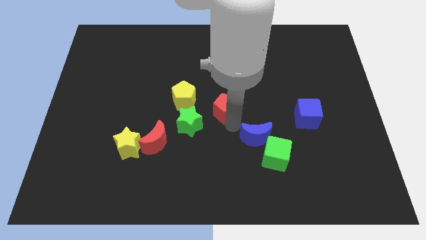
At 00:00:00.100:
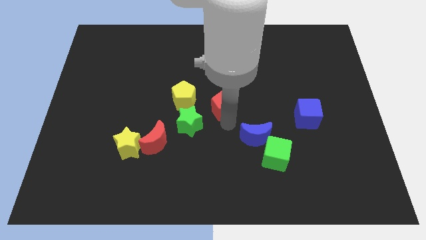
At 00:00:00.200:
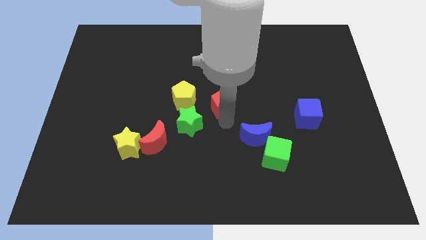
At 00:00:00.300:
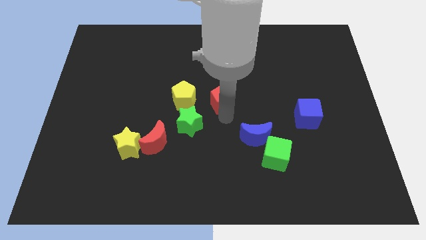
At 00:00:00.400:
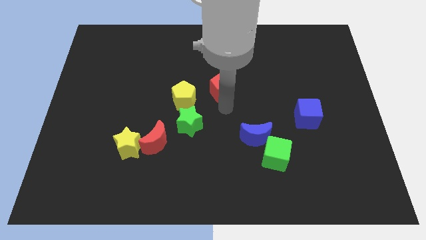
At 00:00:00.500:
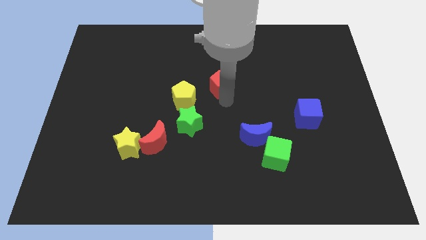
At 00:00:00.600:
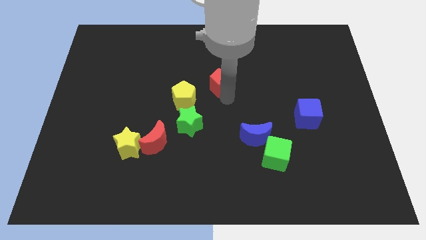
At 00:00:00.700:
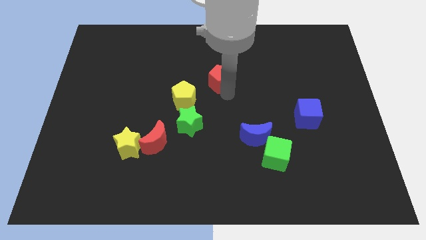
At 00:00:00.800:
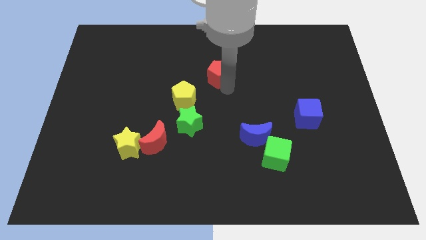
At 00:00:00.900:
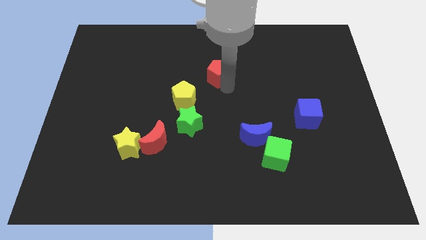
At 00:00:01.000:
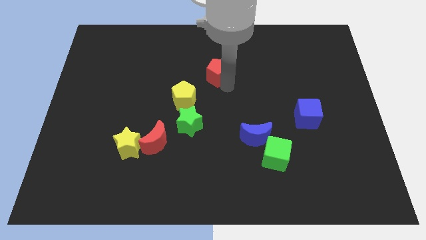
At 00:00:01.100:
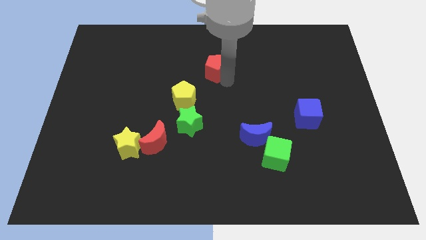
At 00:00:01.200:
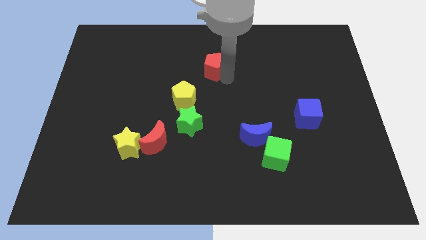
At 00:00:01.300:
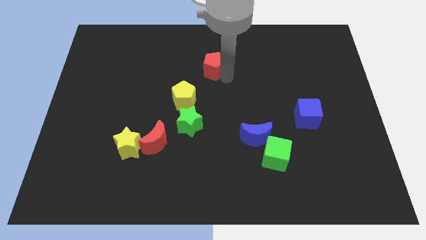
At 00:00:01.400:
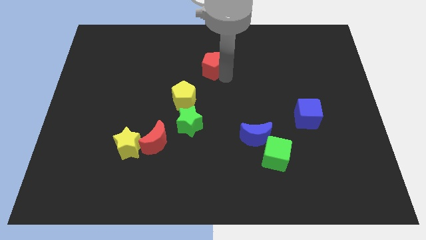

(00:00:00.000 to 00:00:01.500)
push the red pentagon diagonally top right to the yellow pentagon

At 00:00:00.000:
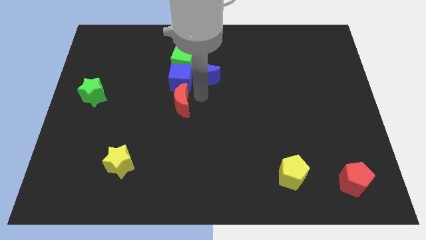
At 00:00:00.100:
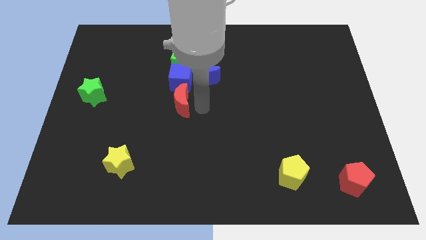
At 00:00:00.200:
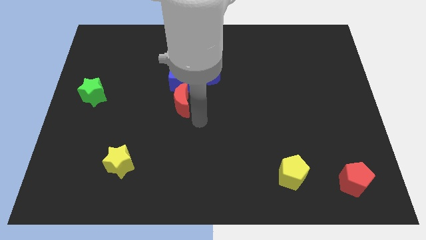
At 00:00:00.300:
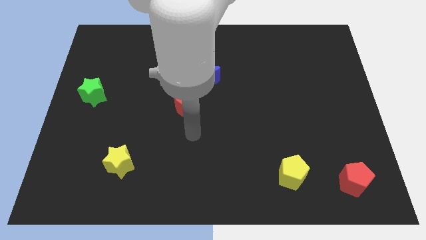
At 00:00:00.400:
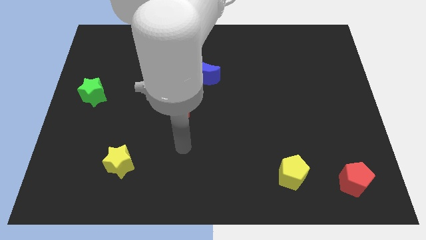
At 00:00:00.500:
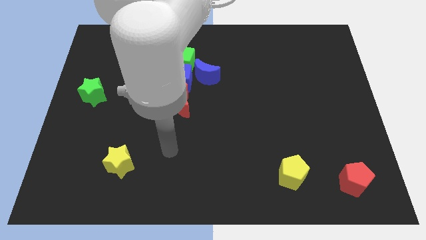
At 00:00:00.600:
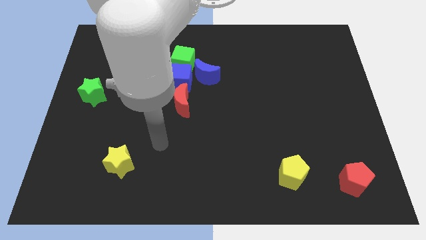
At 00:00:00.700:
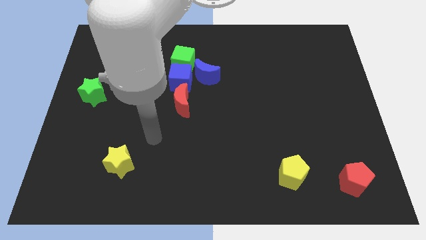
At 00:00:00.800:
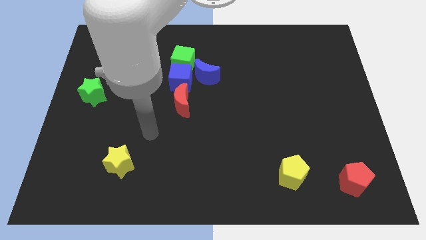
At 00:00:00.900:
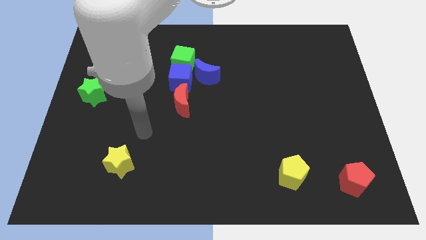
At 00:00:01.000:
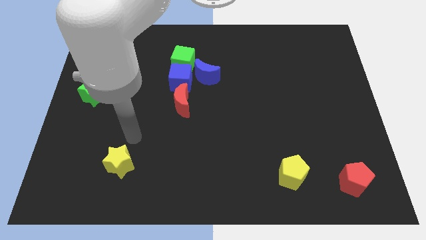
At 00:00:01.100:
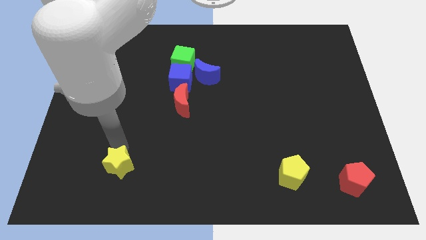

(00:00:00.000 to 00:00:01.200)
point your arm at the top of yellow star

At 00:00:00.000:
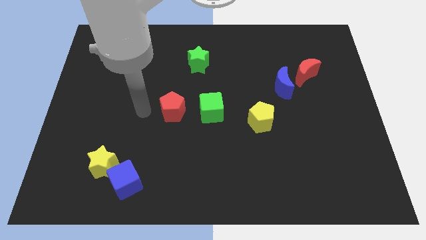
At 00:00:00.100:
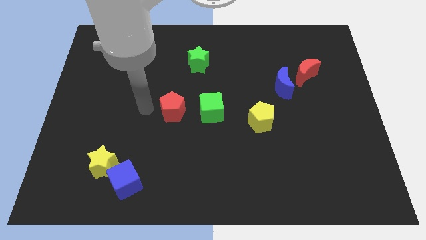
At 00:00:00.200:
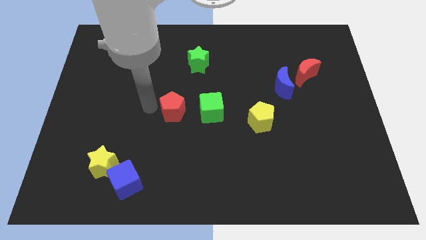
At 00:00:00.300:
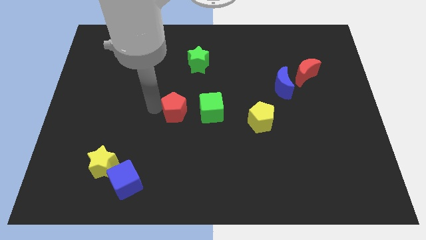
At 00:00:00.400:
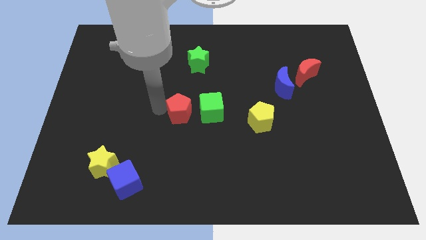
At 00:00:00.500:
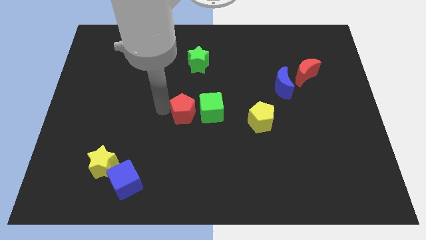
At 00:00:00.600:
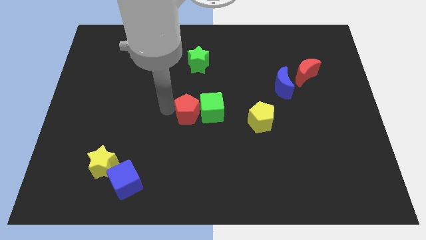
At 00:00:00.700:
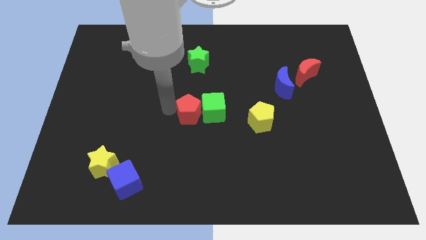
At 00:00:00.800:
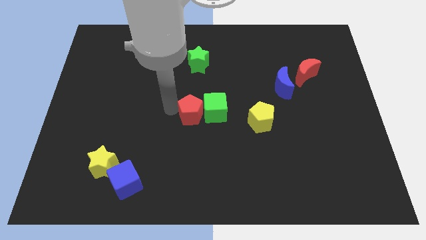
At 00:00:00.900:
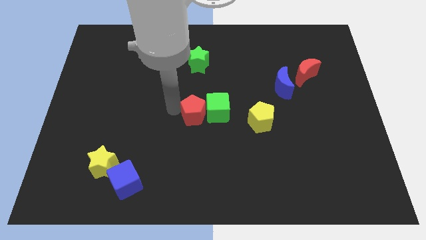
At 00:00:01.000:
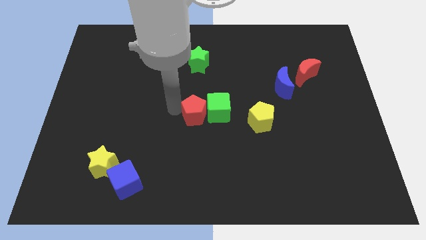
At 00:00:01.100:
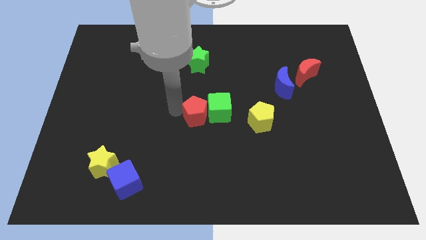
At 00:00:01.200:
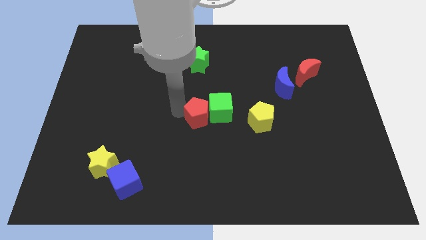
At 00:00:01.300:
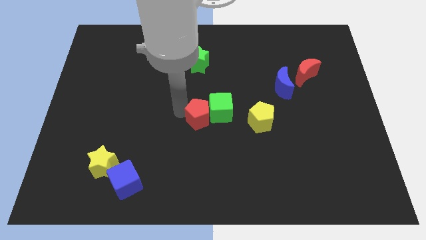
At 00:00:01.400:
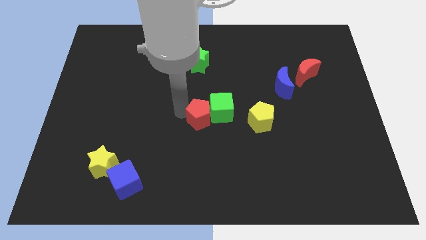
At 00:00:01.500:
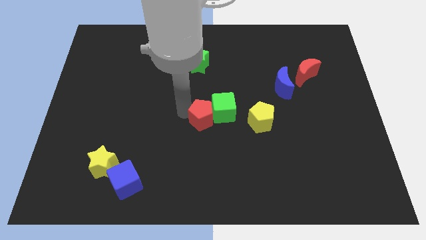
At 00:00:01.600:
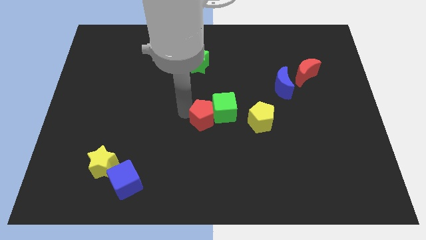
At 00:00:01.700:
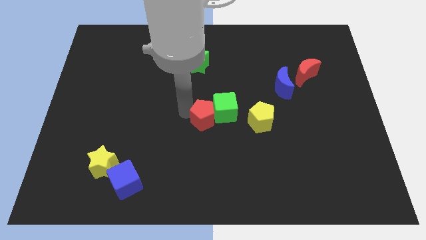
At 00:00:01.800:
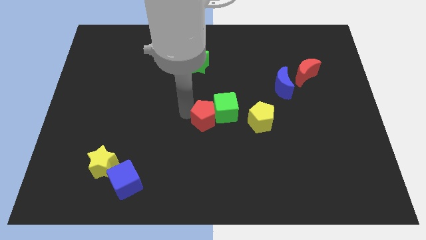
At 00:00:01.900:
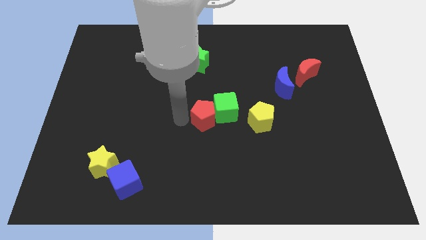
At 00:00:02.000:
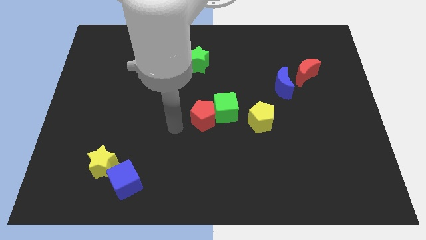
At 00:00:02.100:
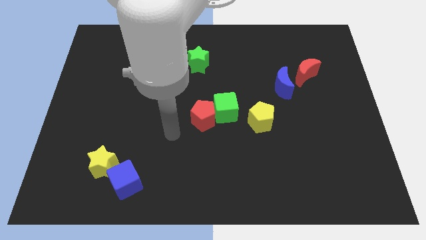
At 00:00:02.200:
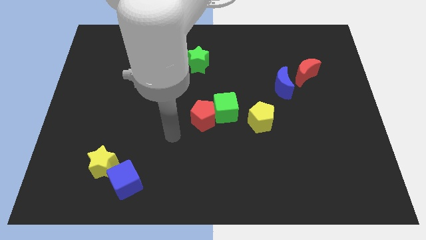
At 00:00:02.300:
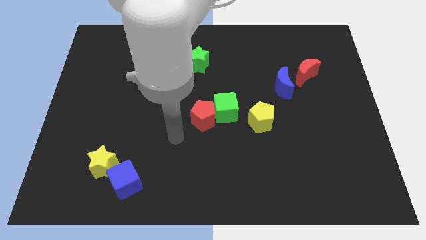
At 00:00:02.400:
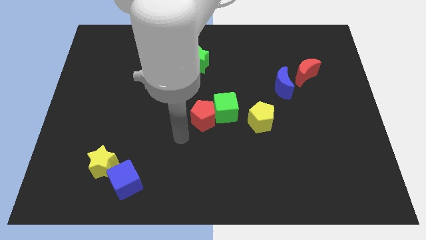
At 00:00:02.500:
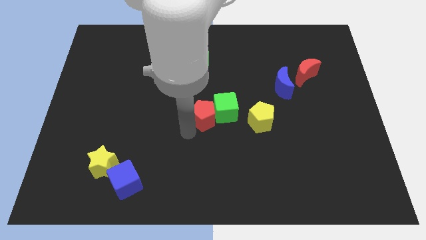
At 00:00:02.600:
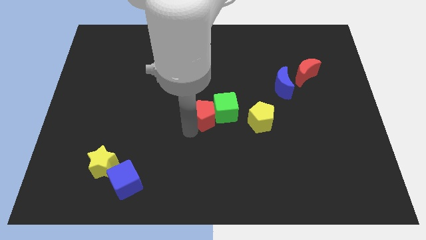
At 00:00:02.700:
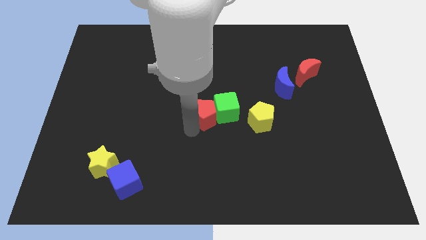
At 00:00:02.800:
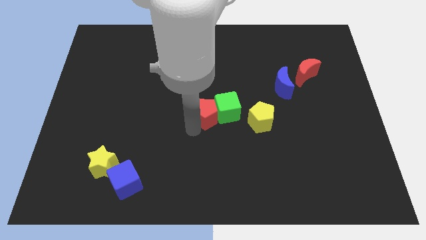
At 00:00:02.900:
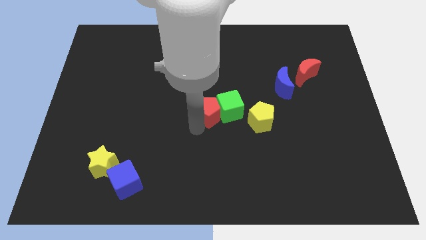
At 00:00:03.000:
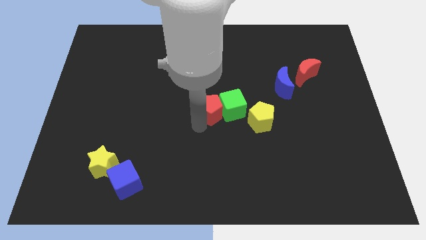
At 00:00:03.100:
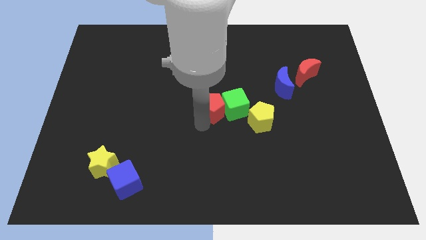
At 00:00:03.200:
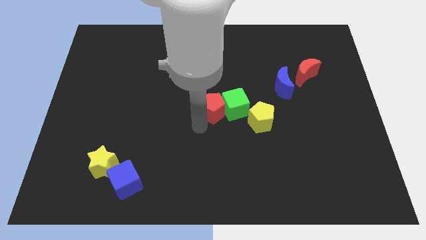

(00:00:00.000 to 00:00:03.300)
move the red pentagon along with the green cube slightly to the right

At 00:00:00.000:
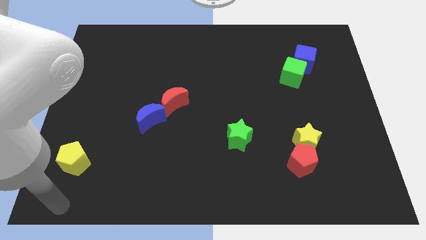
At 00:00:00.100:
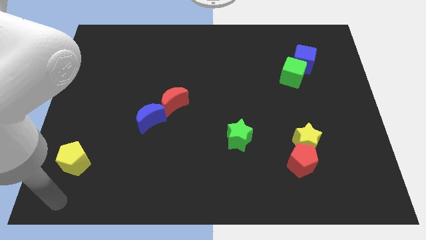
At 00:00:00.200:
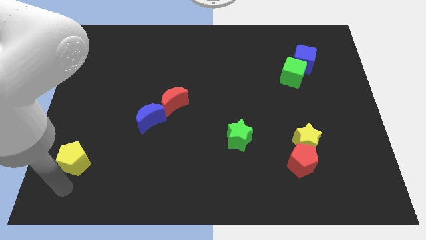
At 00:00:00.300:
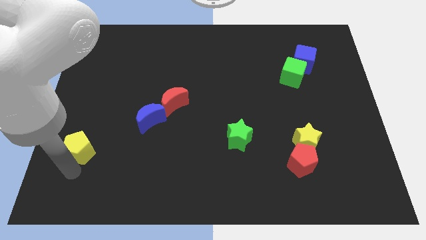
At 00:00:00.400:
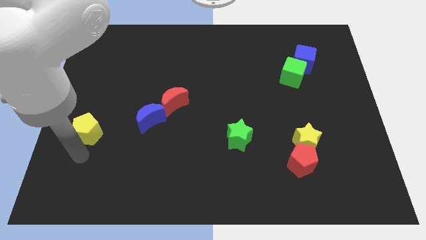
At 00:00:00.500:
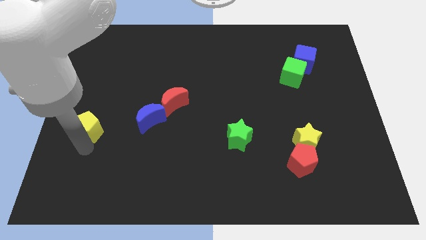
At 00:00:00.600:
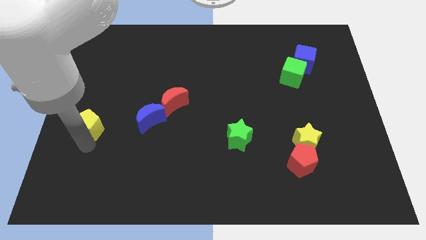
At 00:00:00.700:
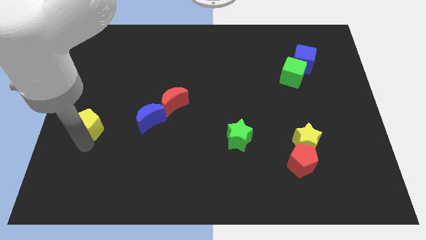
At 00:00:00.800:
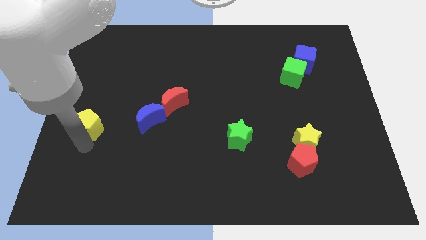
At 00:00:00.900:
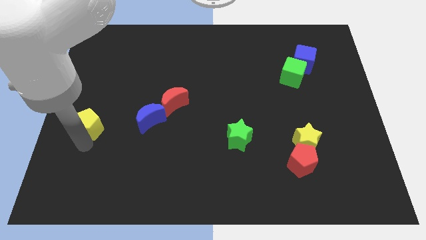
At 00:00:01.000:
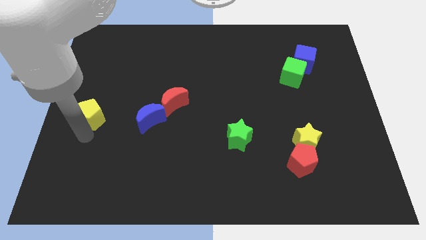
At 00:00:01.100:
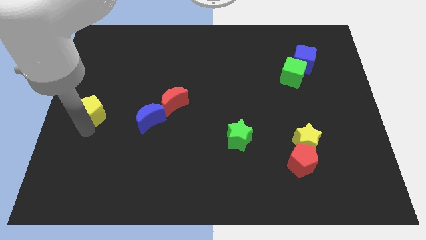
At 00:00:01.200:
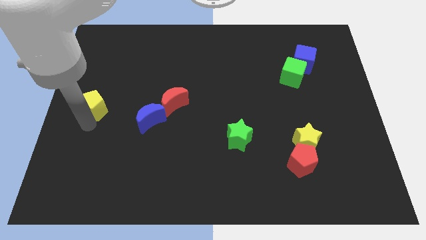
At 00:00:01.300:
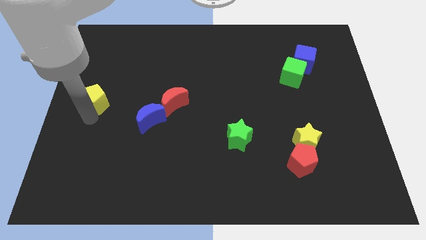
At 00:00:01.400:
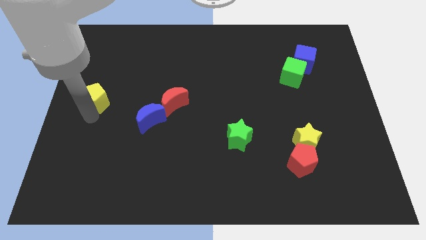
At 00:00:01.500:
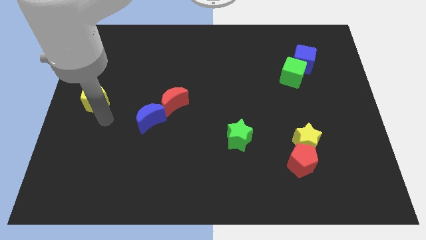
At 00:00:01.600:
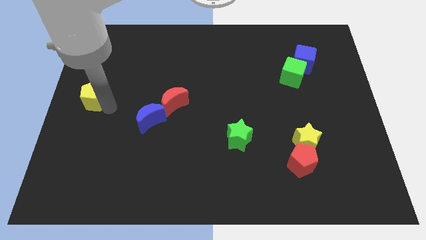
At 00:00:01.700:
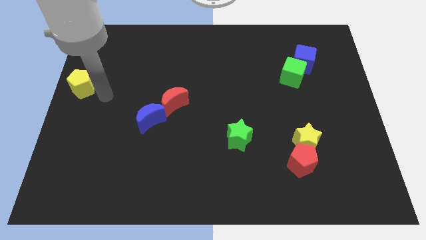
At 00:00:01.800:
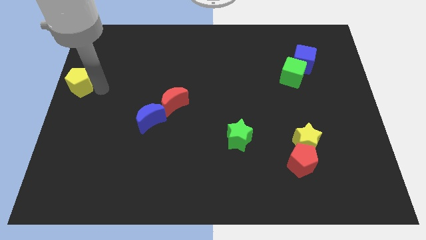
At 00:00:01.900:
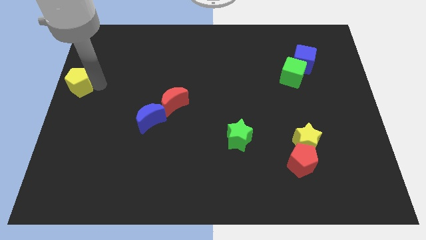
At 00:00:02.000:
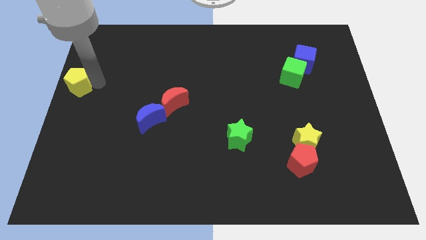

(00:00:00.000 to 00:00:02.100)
place yellow pentagon to the left side of the board

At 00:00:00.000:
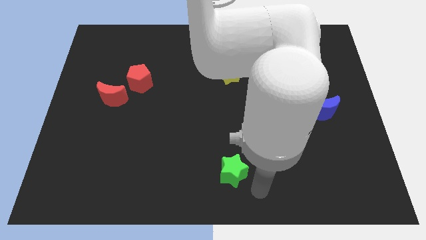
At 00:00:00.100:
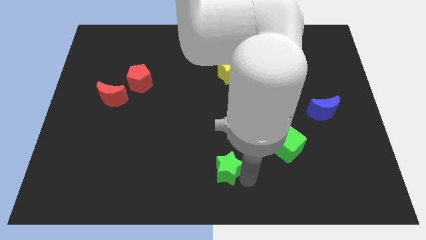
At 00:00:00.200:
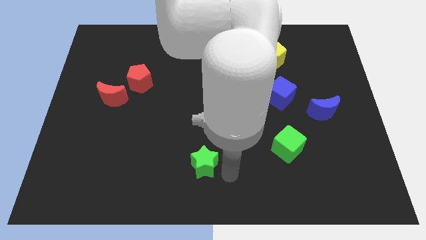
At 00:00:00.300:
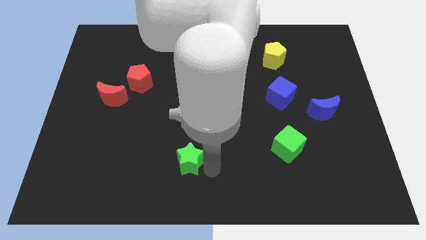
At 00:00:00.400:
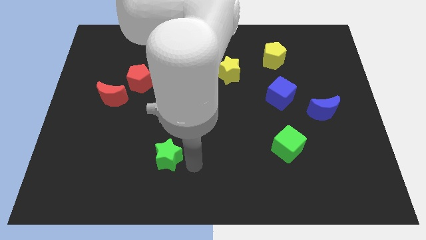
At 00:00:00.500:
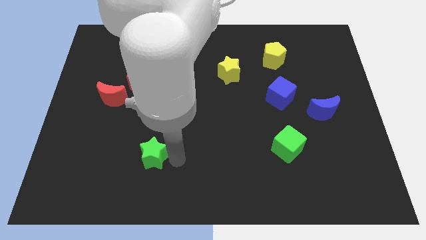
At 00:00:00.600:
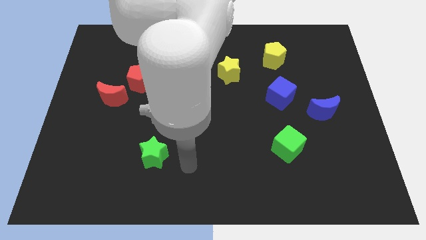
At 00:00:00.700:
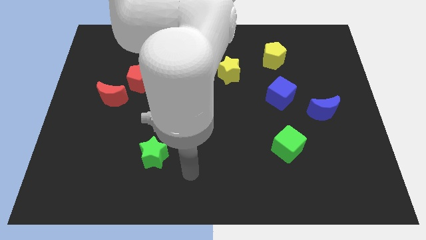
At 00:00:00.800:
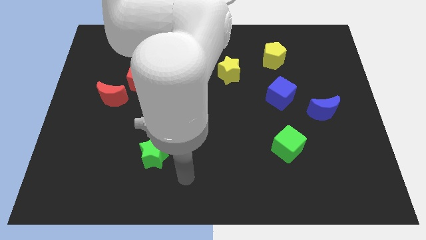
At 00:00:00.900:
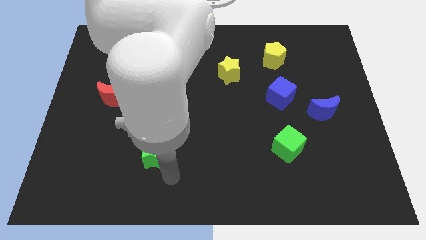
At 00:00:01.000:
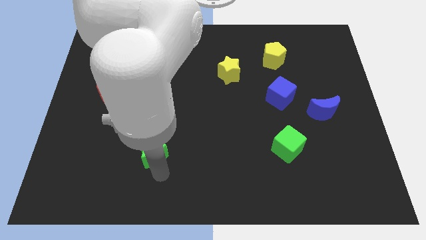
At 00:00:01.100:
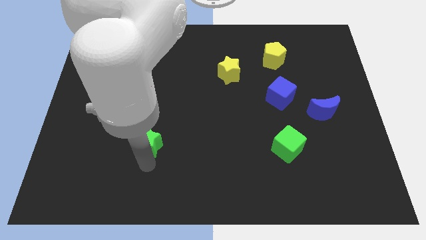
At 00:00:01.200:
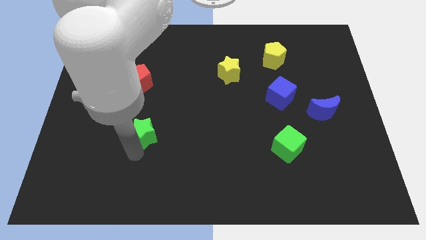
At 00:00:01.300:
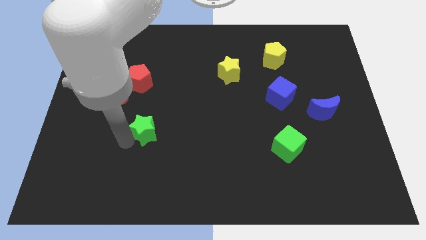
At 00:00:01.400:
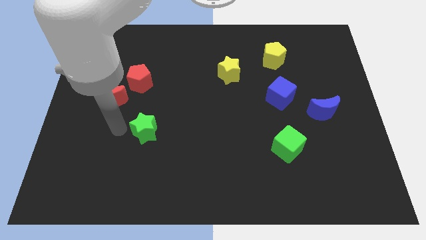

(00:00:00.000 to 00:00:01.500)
push the green star towards red moon
